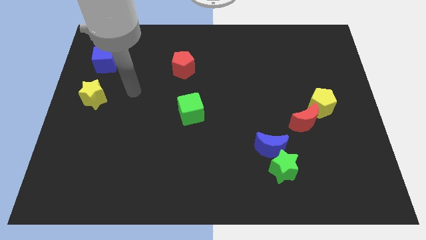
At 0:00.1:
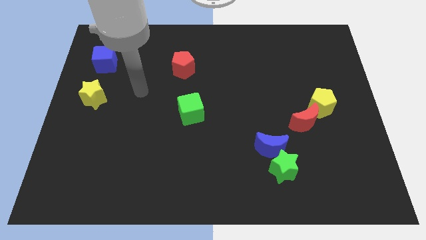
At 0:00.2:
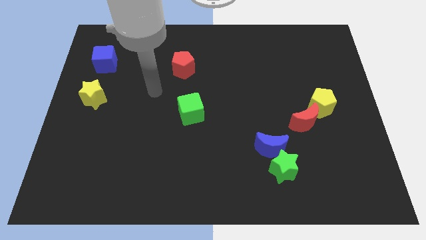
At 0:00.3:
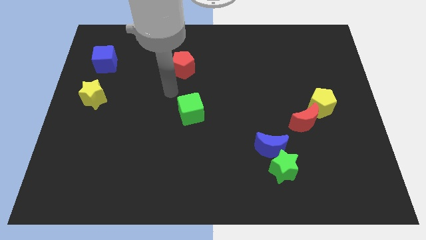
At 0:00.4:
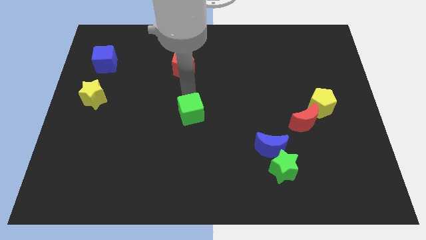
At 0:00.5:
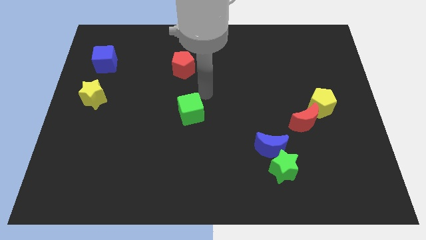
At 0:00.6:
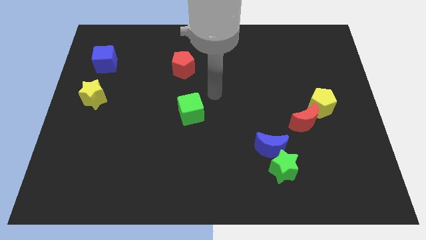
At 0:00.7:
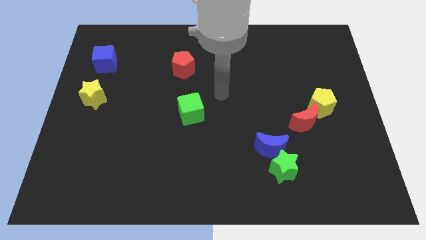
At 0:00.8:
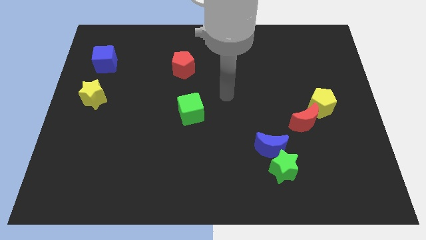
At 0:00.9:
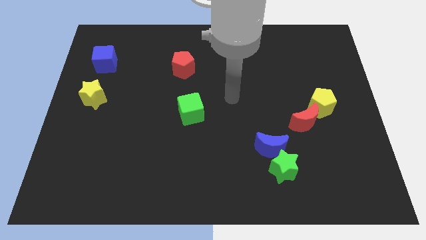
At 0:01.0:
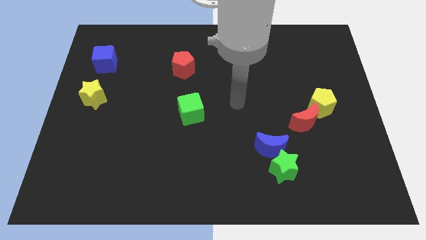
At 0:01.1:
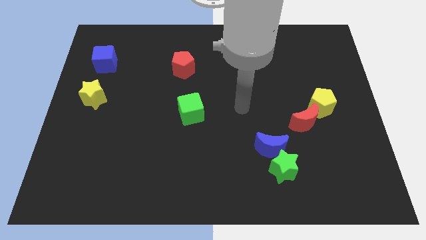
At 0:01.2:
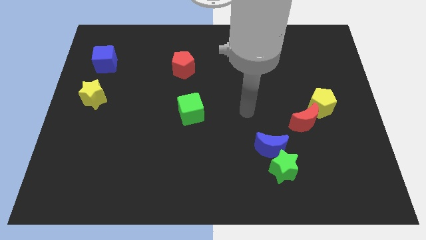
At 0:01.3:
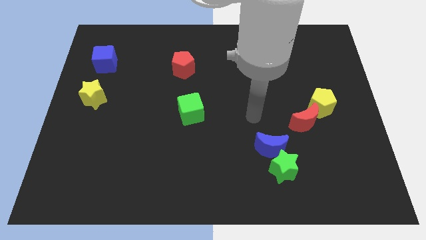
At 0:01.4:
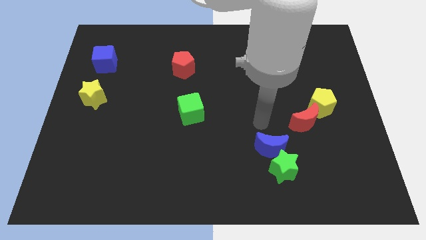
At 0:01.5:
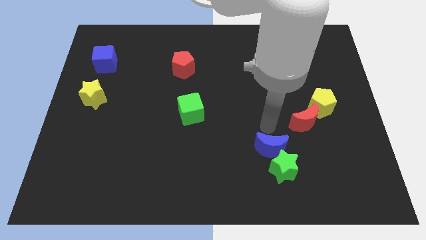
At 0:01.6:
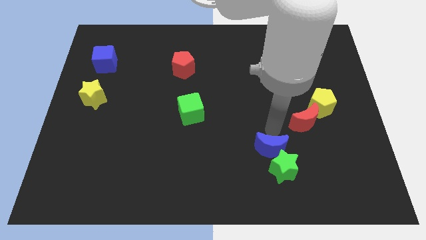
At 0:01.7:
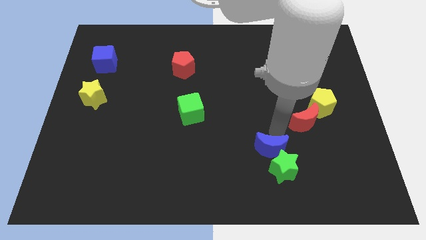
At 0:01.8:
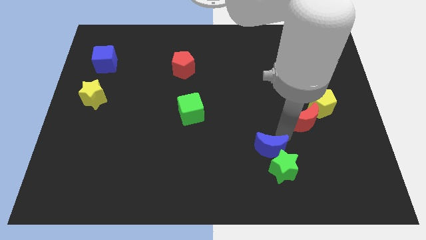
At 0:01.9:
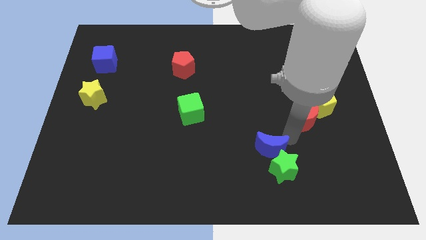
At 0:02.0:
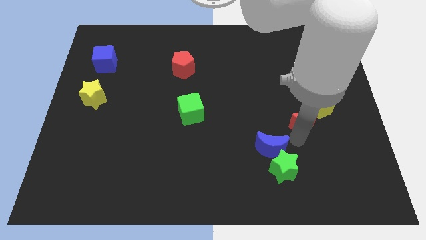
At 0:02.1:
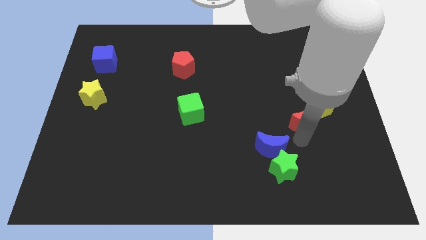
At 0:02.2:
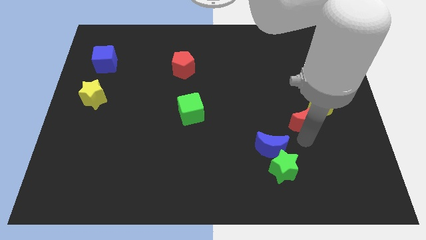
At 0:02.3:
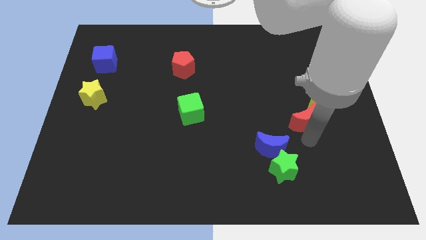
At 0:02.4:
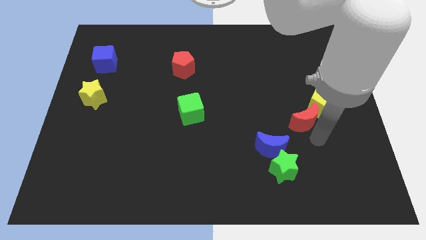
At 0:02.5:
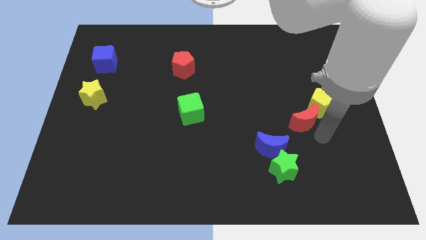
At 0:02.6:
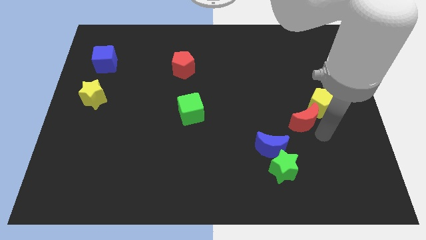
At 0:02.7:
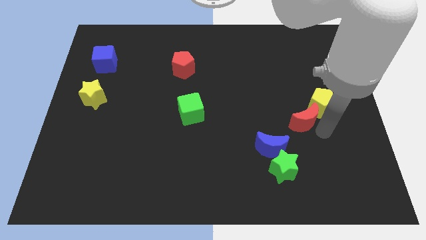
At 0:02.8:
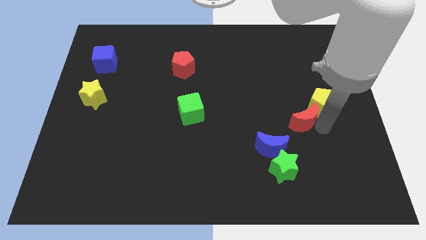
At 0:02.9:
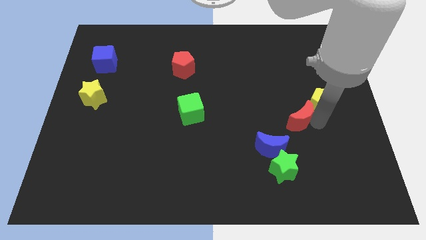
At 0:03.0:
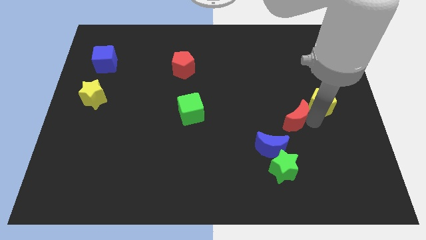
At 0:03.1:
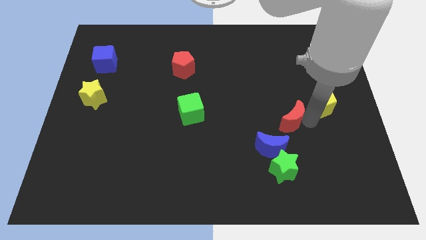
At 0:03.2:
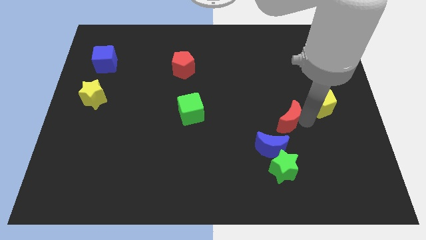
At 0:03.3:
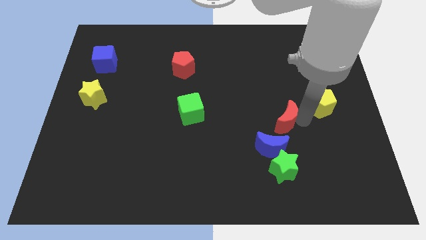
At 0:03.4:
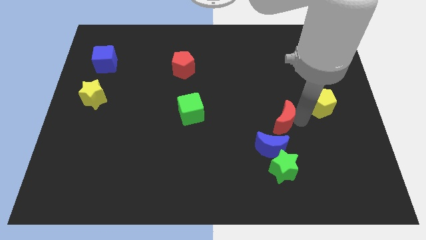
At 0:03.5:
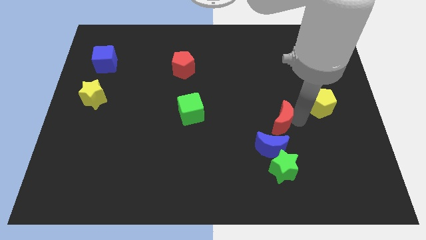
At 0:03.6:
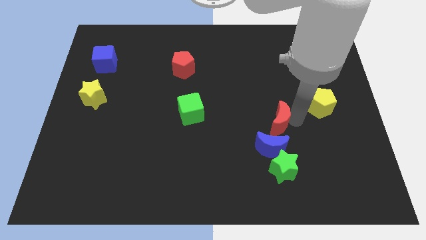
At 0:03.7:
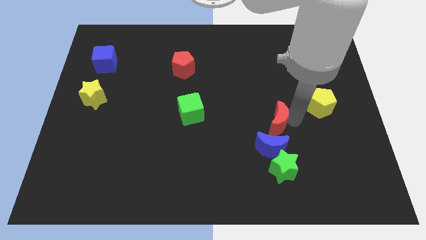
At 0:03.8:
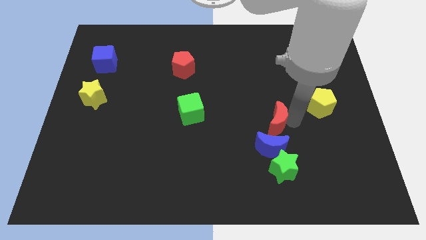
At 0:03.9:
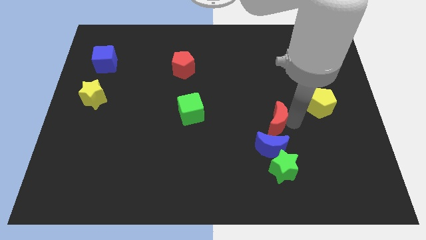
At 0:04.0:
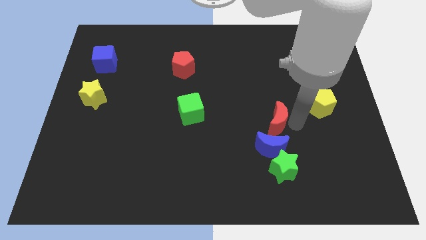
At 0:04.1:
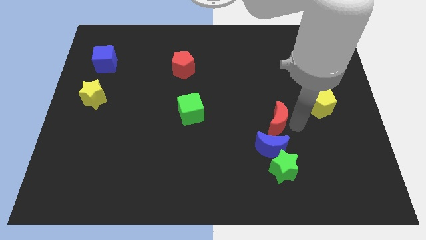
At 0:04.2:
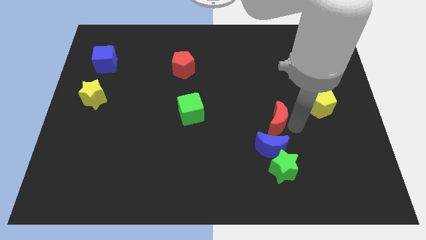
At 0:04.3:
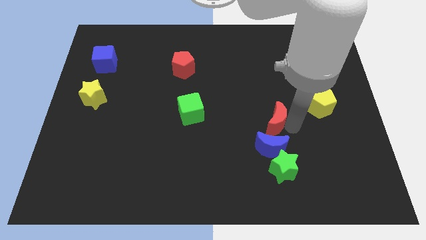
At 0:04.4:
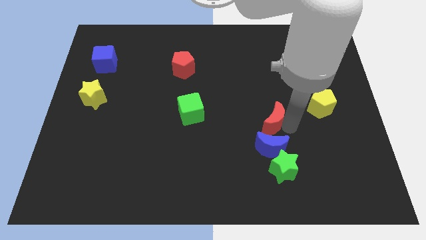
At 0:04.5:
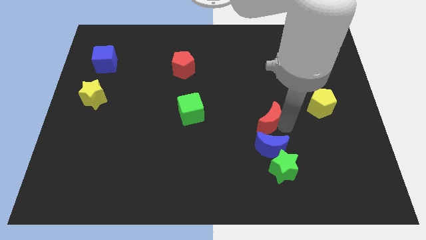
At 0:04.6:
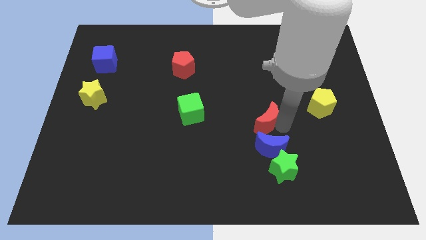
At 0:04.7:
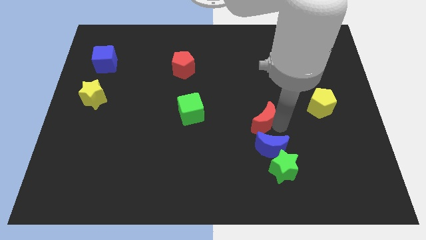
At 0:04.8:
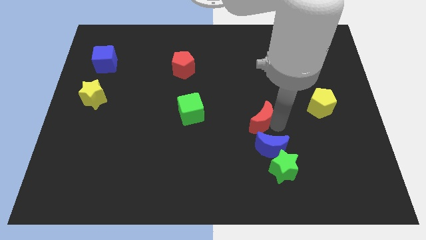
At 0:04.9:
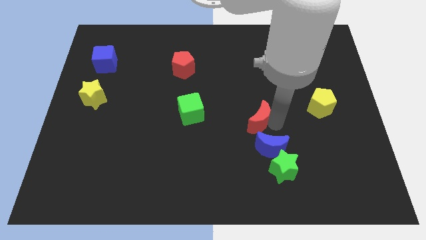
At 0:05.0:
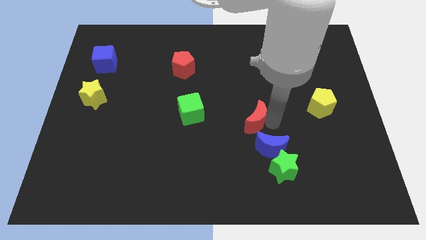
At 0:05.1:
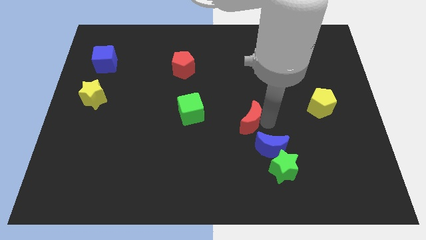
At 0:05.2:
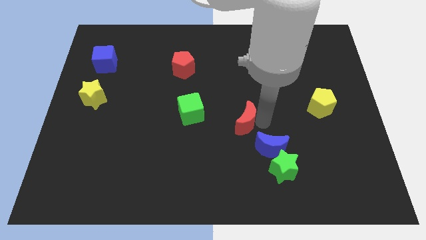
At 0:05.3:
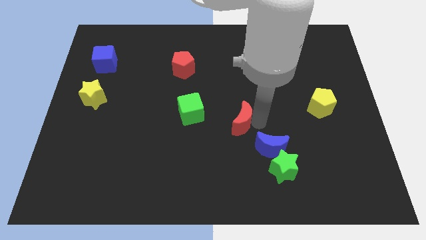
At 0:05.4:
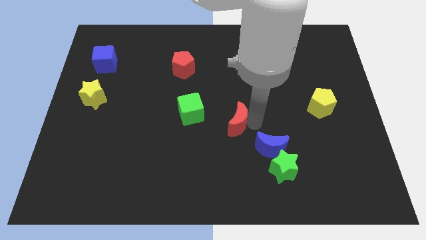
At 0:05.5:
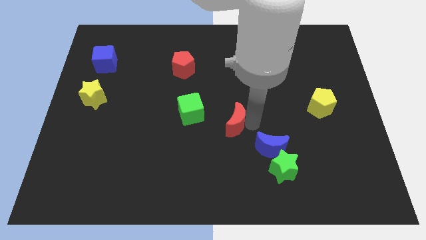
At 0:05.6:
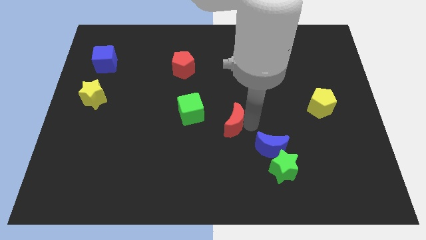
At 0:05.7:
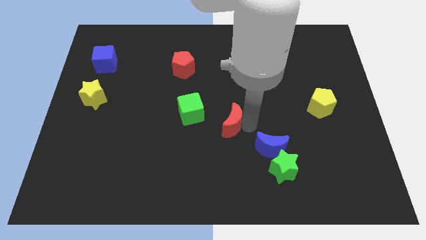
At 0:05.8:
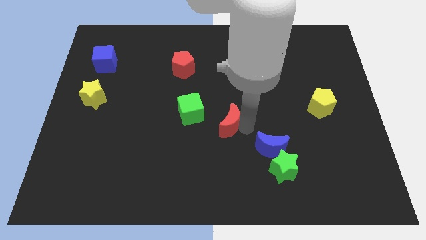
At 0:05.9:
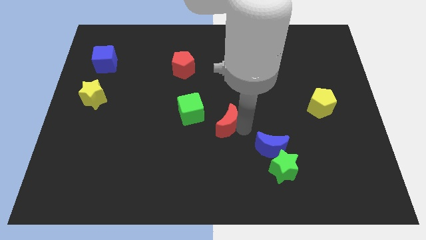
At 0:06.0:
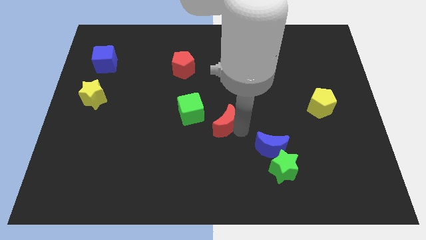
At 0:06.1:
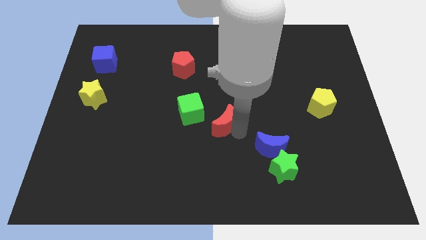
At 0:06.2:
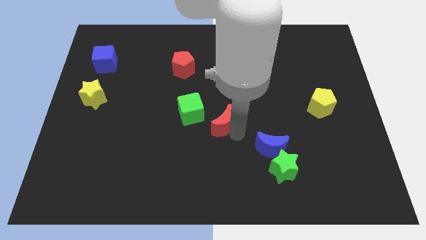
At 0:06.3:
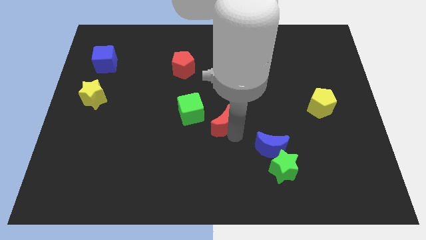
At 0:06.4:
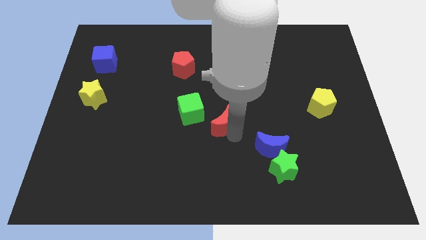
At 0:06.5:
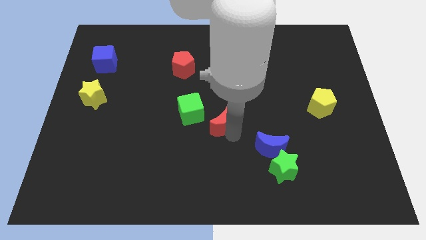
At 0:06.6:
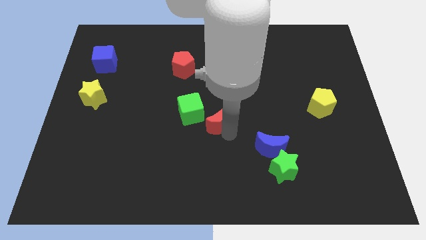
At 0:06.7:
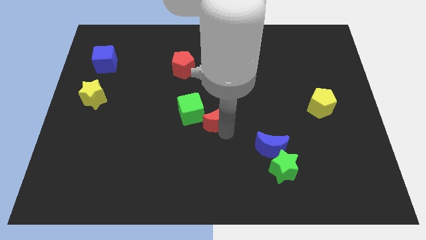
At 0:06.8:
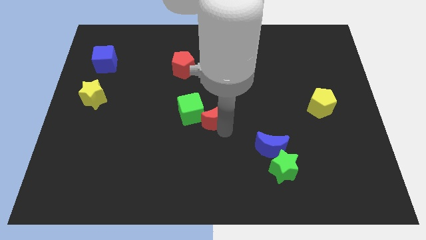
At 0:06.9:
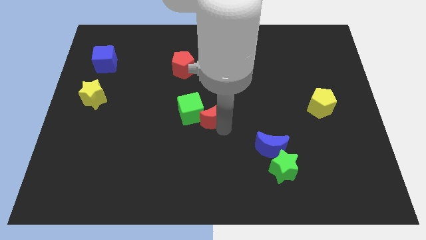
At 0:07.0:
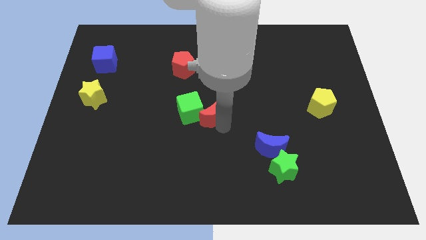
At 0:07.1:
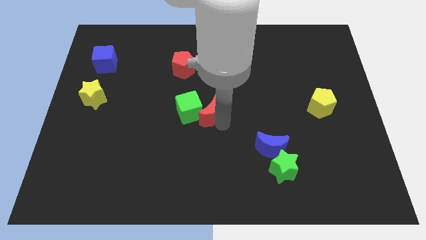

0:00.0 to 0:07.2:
push the red moon close to the green cube

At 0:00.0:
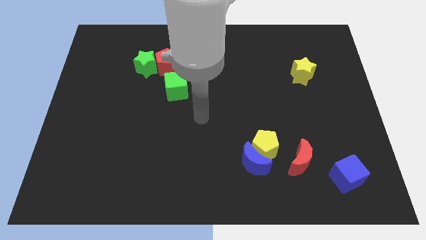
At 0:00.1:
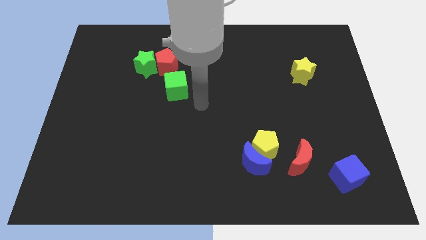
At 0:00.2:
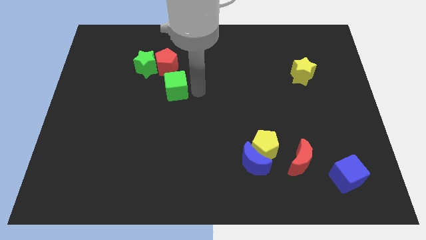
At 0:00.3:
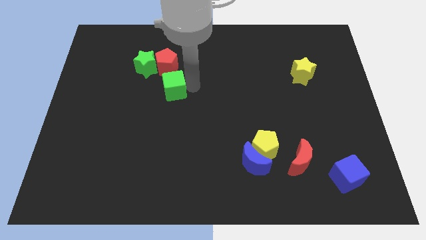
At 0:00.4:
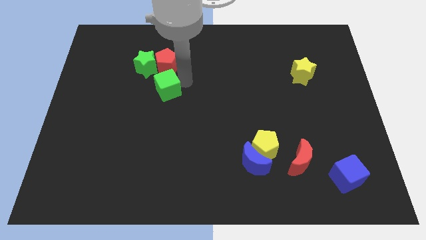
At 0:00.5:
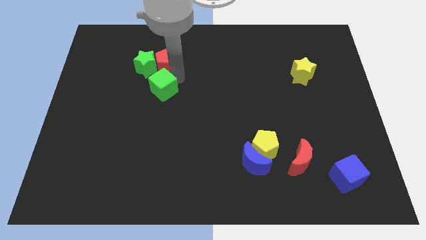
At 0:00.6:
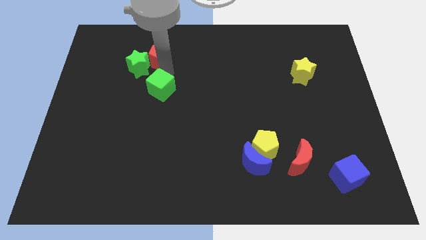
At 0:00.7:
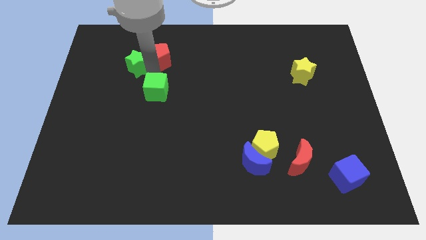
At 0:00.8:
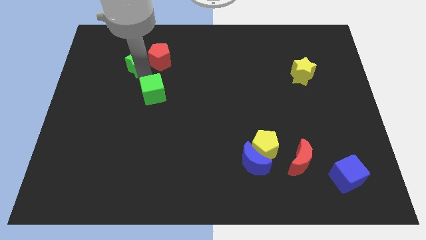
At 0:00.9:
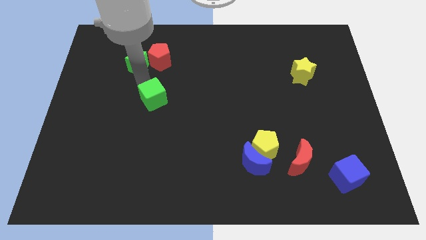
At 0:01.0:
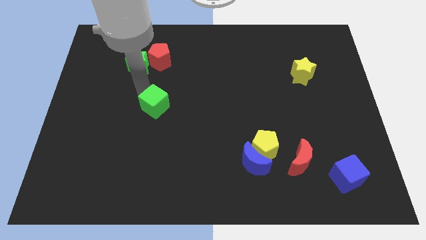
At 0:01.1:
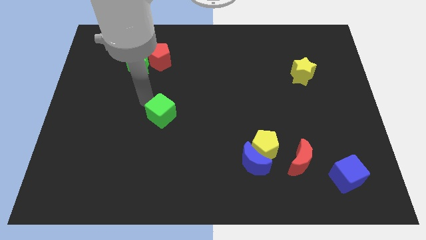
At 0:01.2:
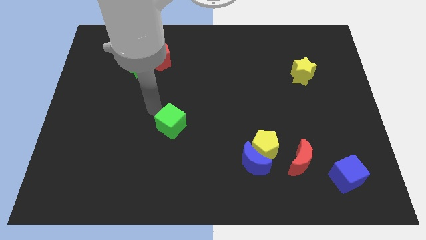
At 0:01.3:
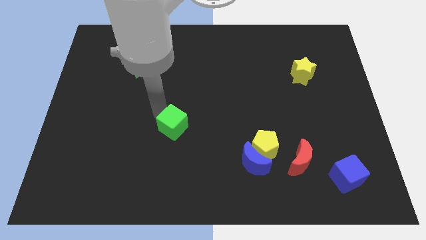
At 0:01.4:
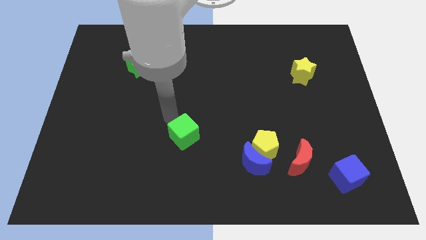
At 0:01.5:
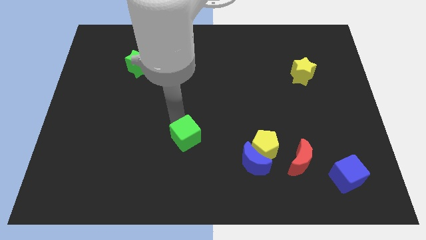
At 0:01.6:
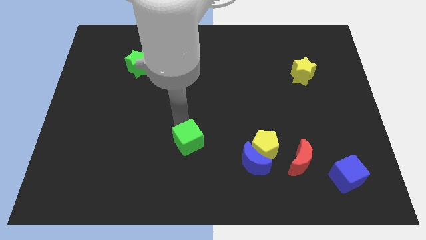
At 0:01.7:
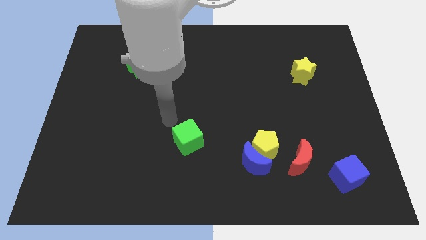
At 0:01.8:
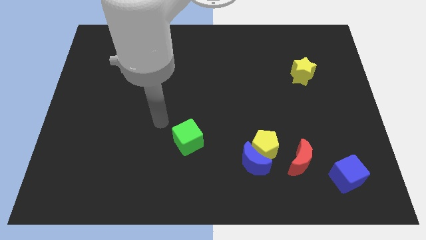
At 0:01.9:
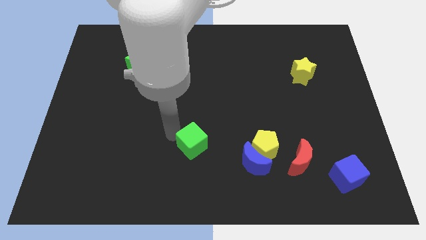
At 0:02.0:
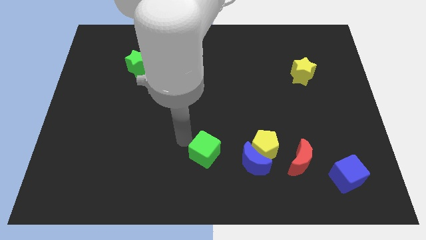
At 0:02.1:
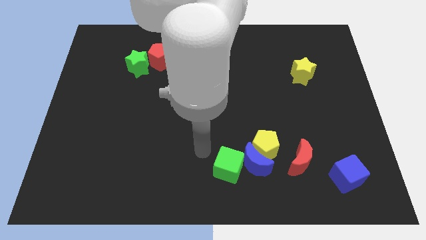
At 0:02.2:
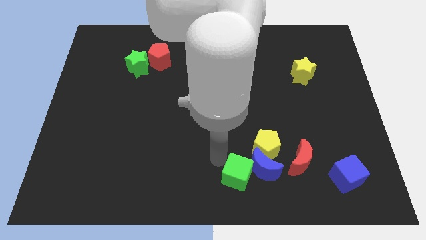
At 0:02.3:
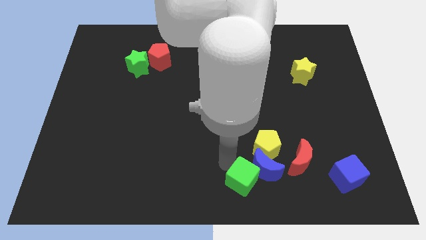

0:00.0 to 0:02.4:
slide the green cube towards the blue moon
